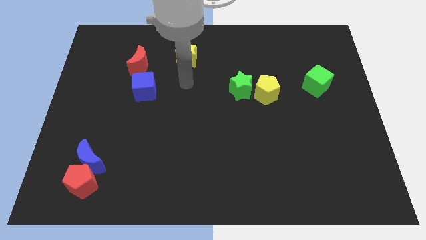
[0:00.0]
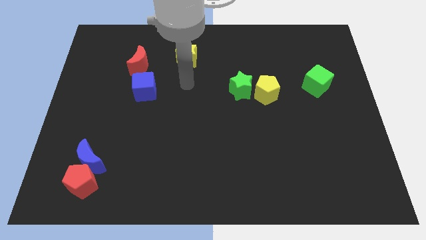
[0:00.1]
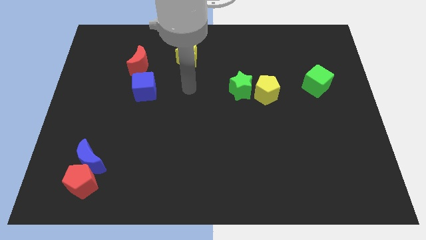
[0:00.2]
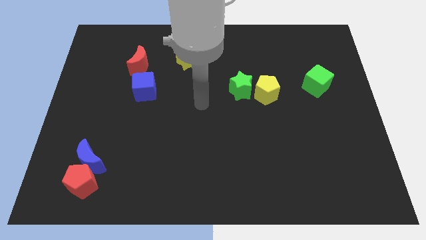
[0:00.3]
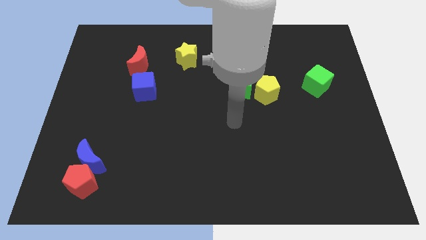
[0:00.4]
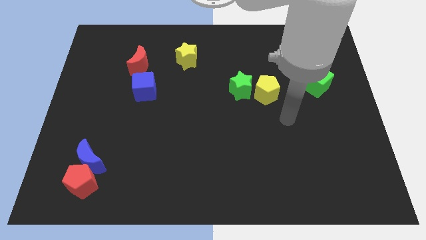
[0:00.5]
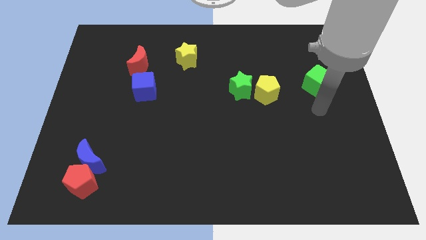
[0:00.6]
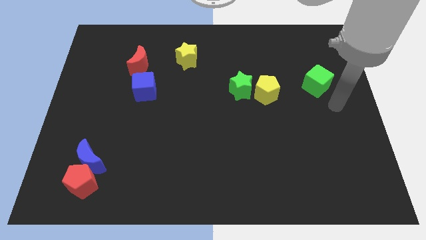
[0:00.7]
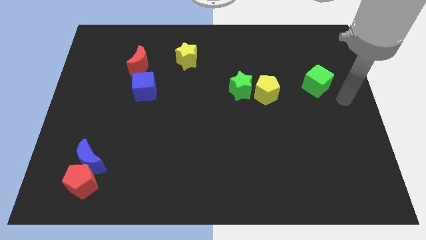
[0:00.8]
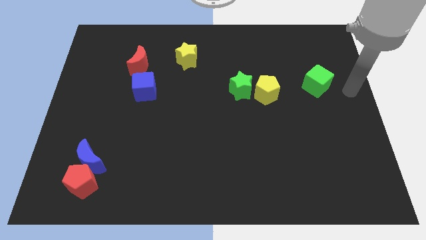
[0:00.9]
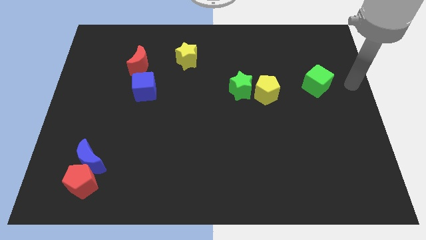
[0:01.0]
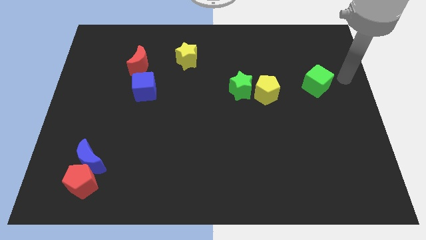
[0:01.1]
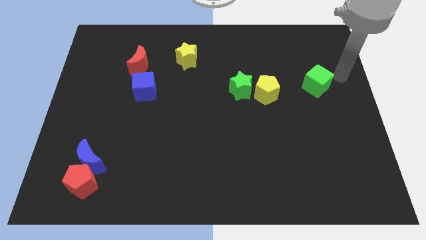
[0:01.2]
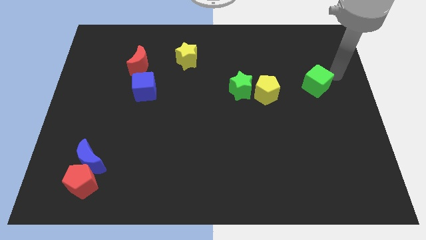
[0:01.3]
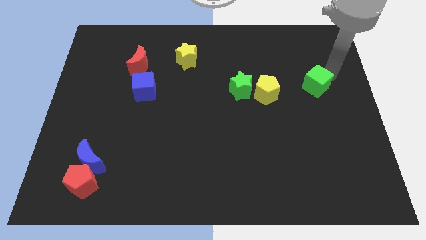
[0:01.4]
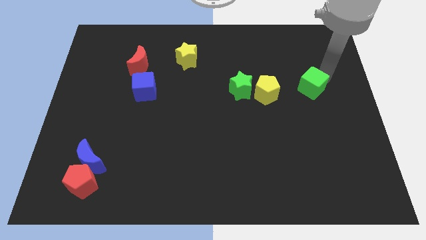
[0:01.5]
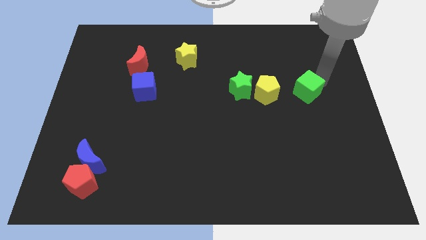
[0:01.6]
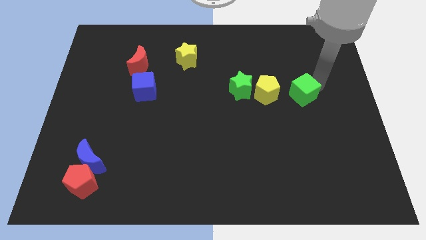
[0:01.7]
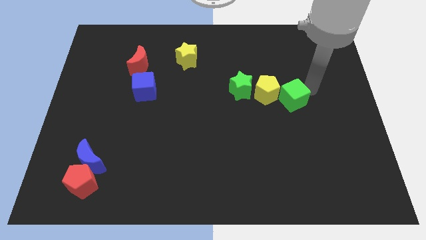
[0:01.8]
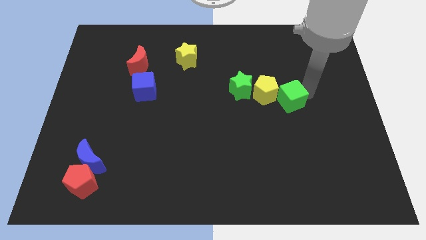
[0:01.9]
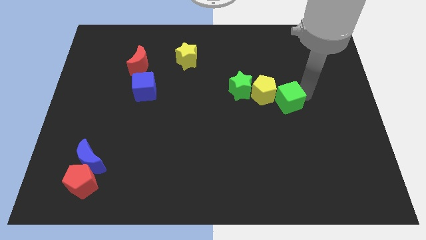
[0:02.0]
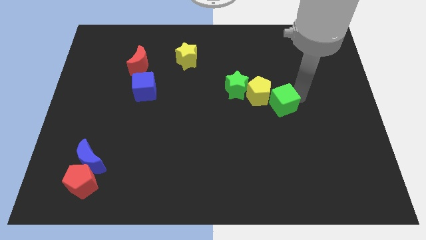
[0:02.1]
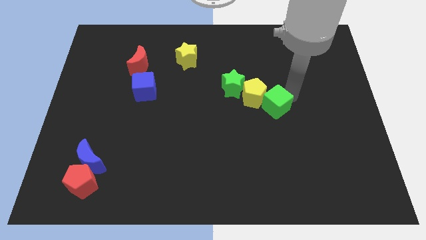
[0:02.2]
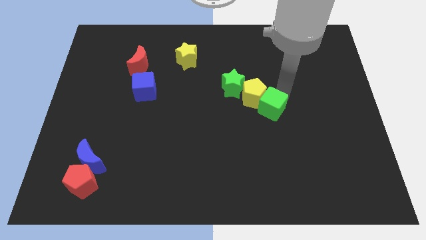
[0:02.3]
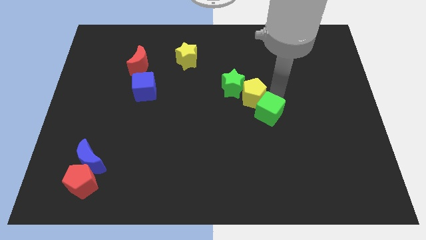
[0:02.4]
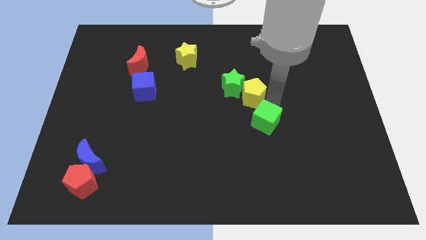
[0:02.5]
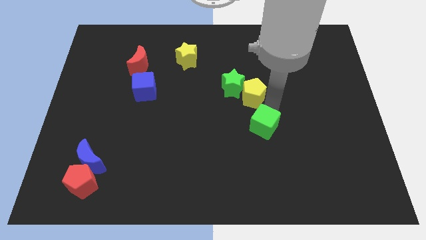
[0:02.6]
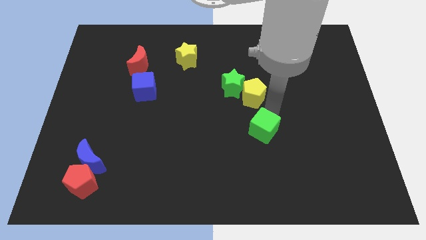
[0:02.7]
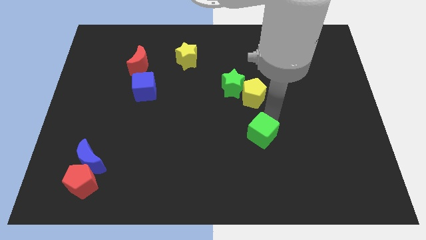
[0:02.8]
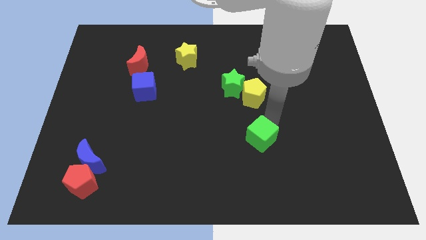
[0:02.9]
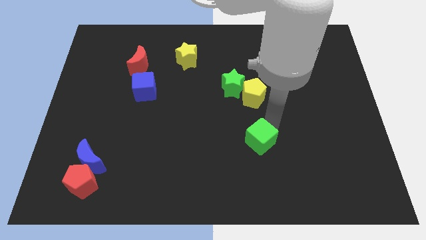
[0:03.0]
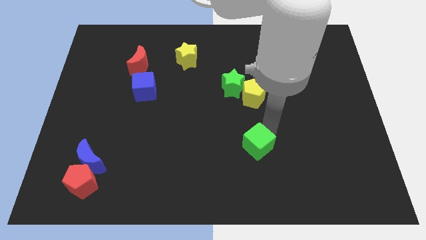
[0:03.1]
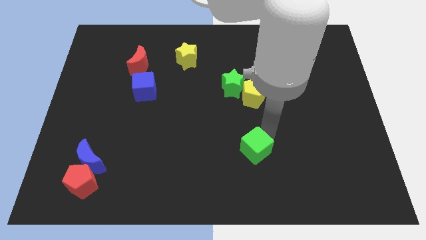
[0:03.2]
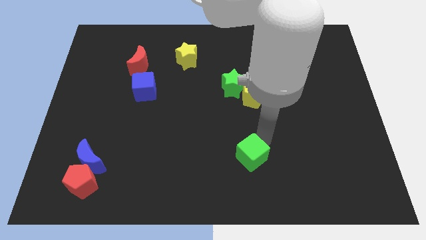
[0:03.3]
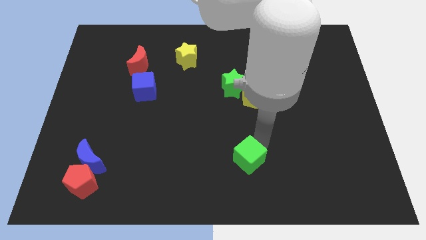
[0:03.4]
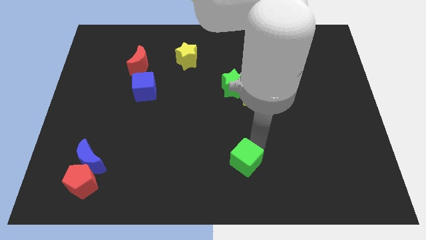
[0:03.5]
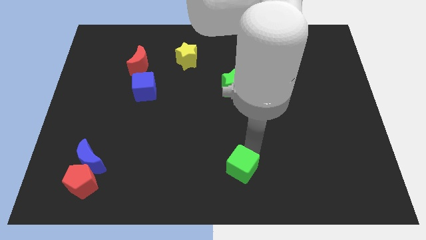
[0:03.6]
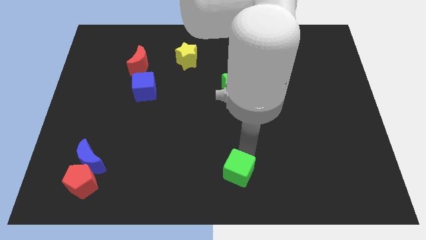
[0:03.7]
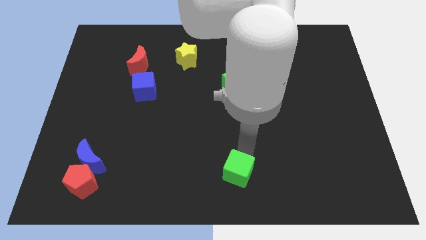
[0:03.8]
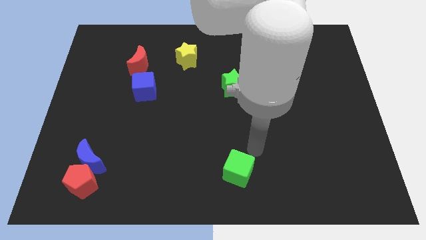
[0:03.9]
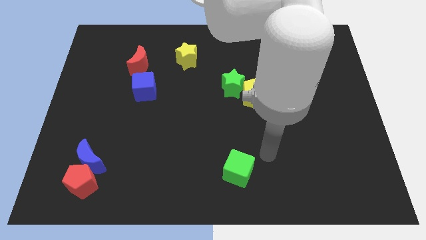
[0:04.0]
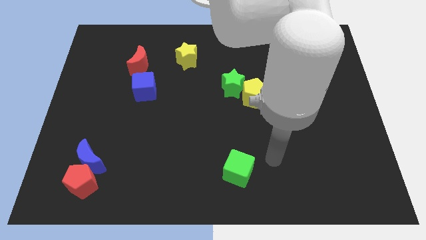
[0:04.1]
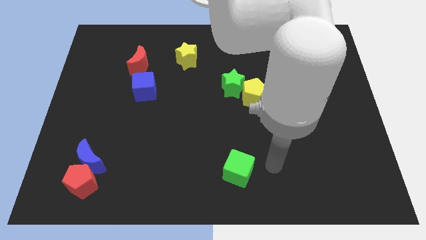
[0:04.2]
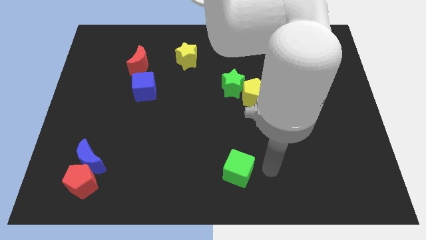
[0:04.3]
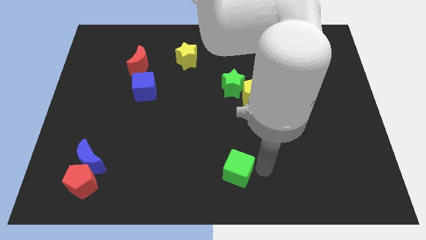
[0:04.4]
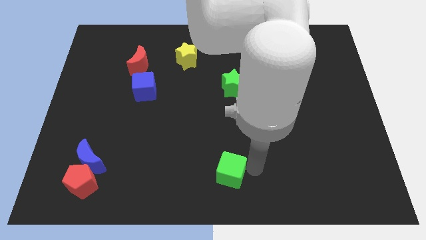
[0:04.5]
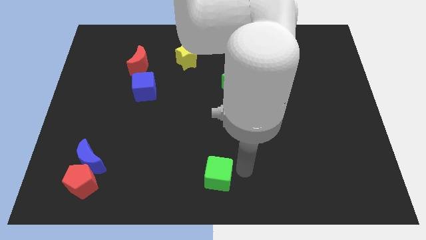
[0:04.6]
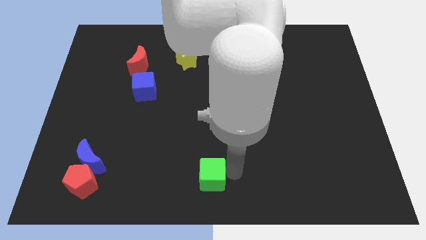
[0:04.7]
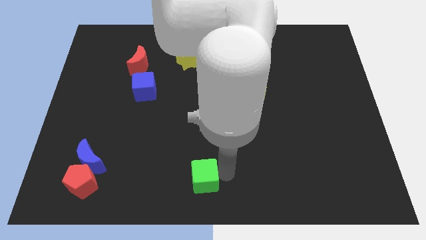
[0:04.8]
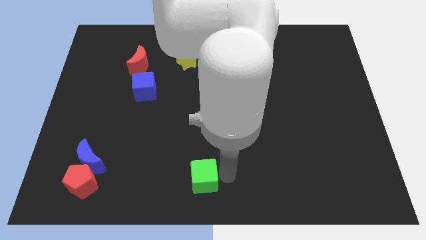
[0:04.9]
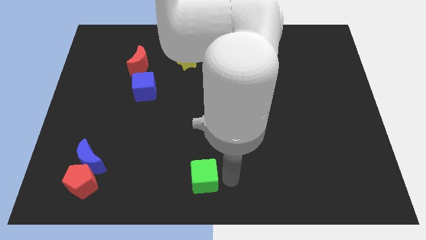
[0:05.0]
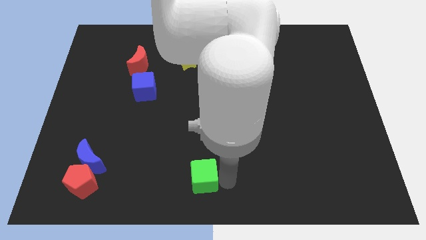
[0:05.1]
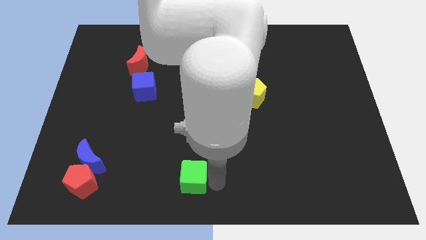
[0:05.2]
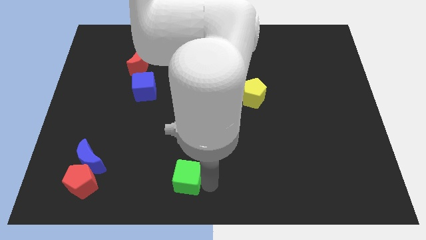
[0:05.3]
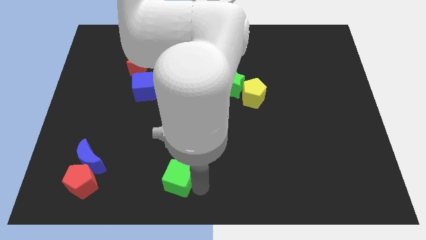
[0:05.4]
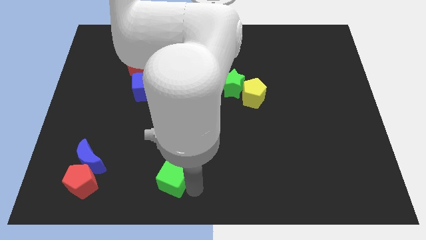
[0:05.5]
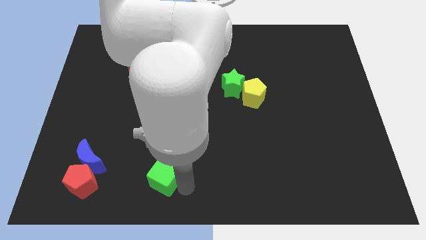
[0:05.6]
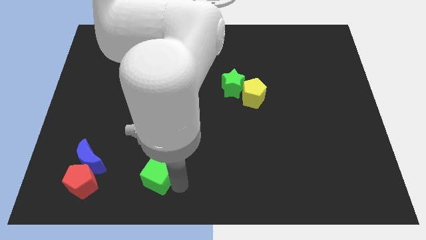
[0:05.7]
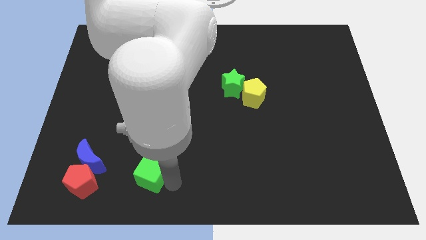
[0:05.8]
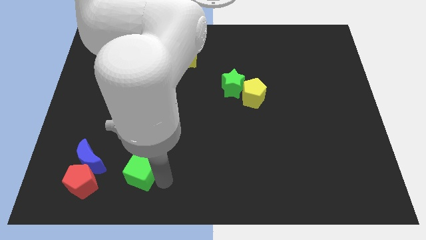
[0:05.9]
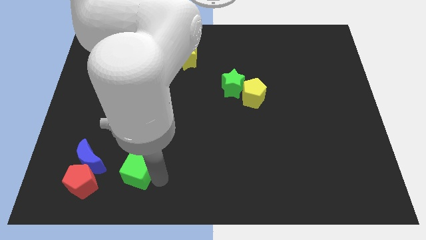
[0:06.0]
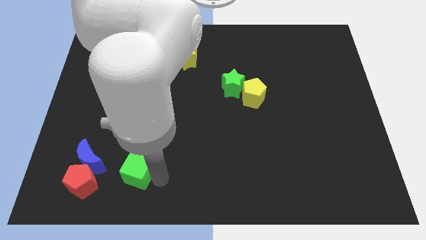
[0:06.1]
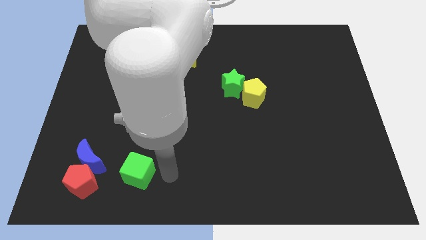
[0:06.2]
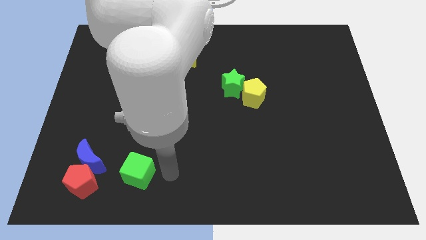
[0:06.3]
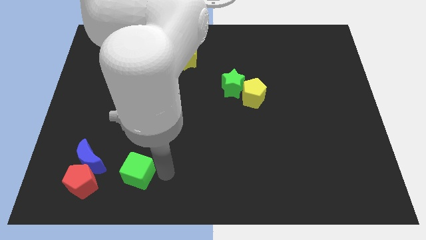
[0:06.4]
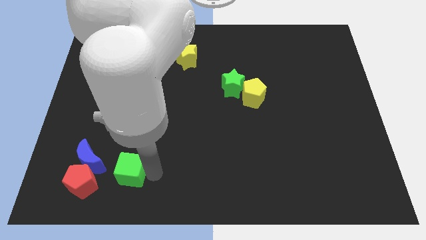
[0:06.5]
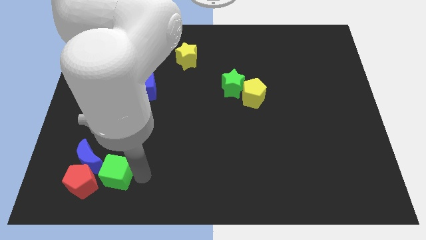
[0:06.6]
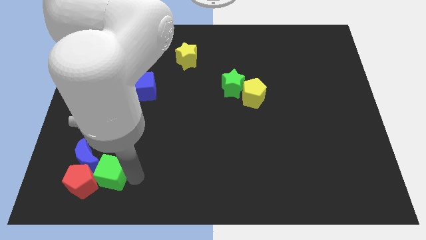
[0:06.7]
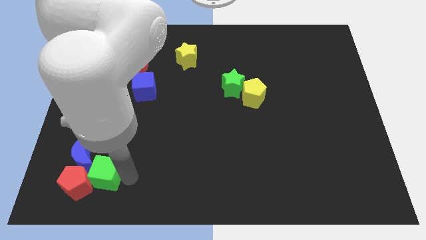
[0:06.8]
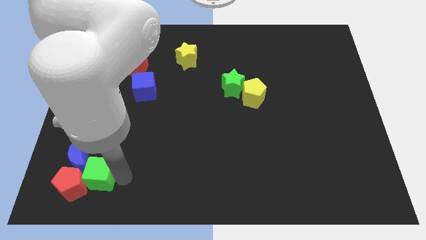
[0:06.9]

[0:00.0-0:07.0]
slide the green cube to the red pentagon

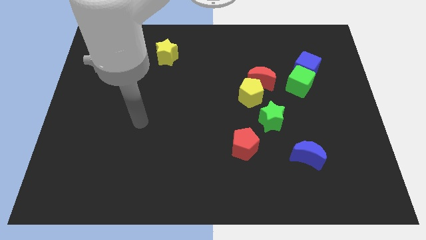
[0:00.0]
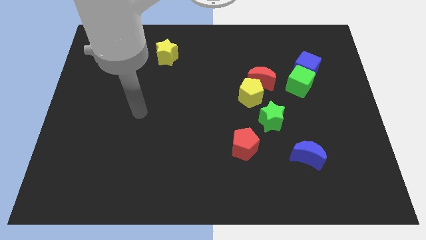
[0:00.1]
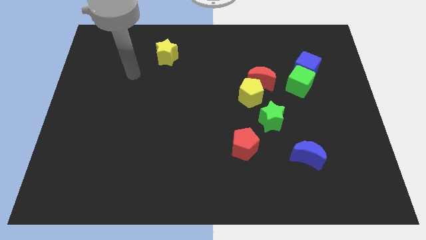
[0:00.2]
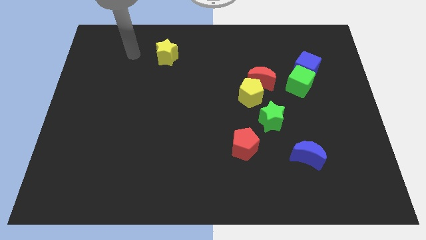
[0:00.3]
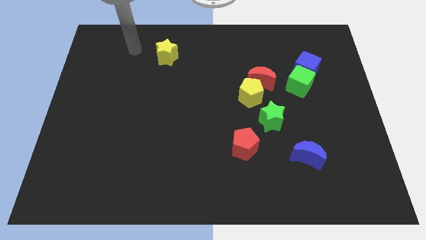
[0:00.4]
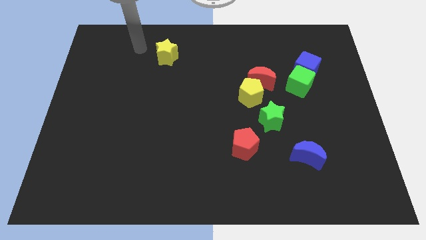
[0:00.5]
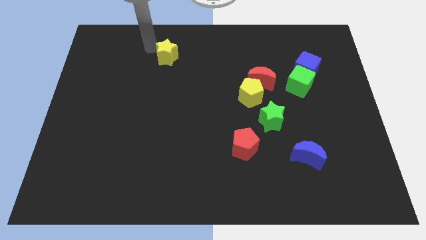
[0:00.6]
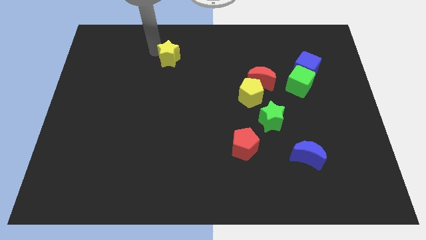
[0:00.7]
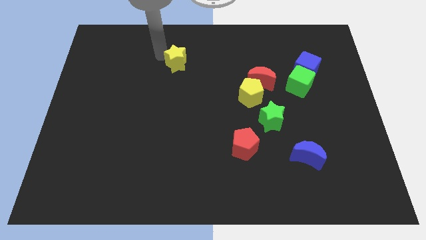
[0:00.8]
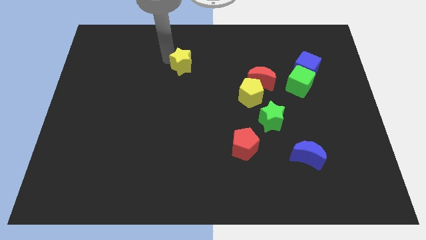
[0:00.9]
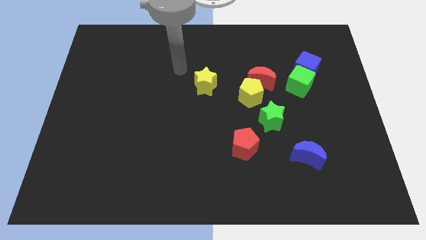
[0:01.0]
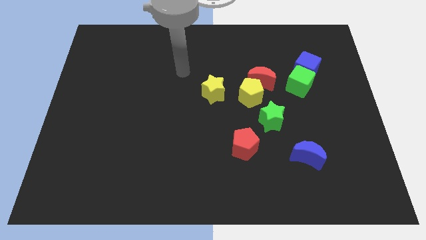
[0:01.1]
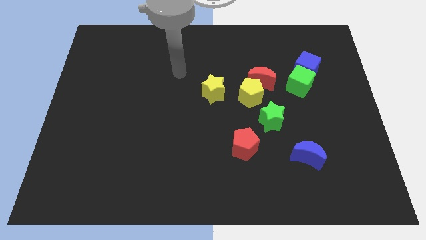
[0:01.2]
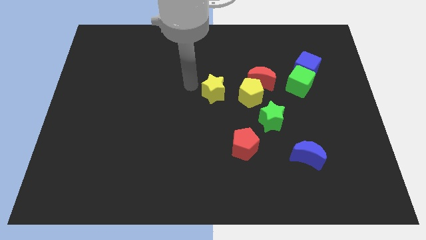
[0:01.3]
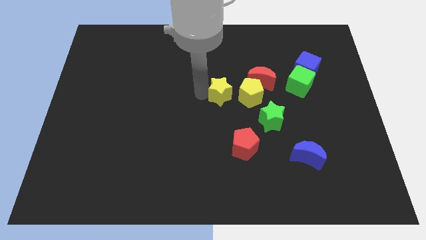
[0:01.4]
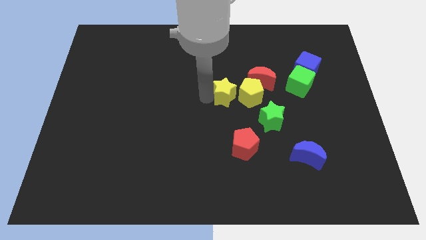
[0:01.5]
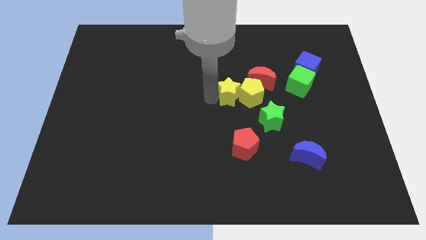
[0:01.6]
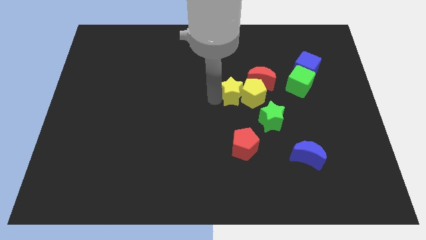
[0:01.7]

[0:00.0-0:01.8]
push the yellow star towards the yellow pentagon

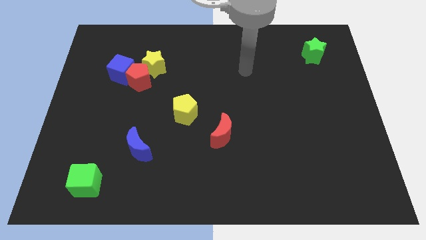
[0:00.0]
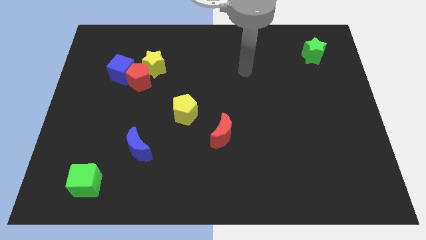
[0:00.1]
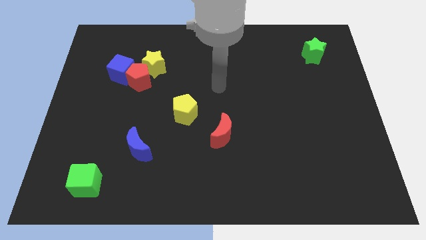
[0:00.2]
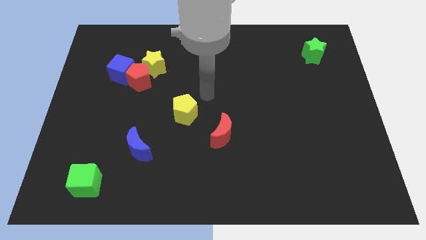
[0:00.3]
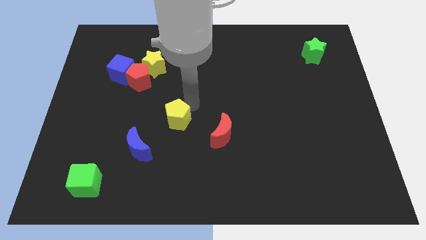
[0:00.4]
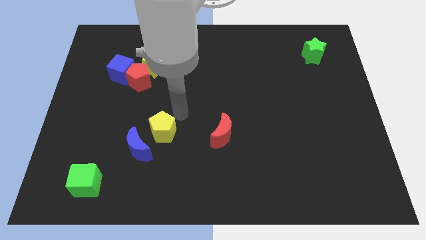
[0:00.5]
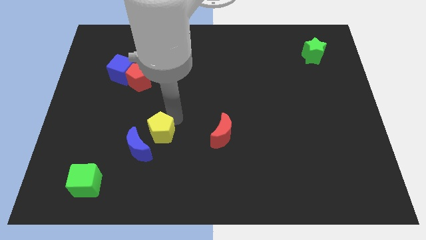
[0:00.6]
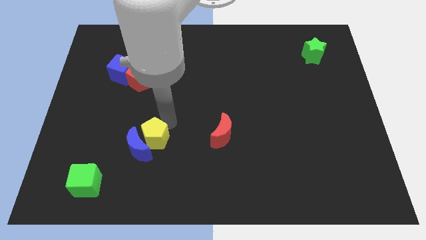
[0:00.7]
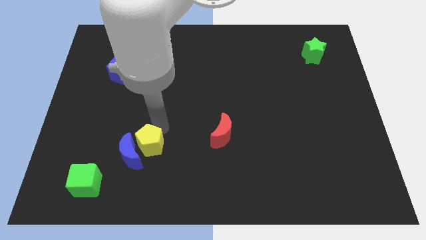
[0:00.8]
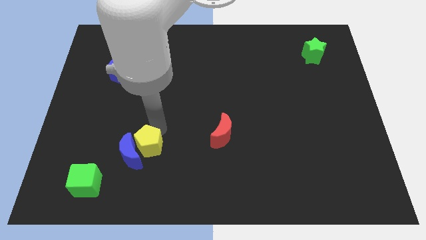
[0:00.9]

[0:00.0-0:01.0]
push the yellow pentagon close to the blue moon
